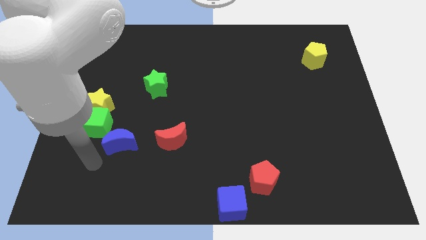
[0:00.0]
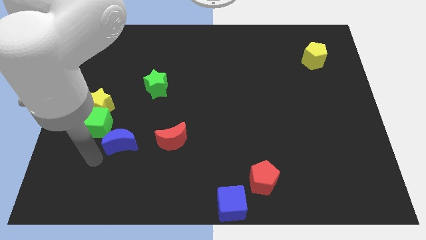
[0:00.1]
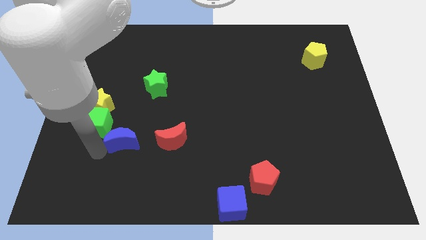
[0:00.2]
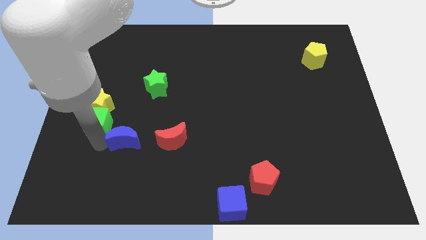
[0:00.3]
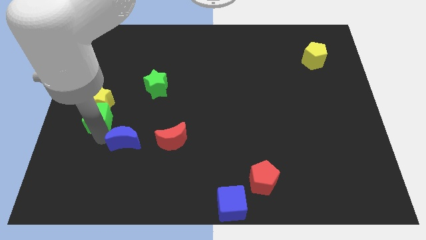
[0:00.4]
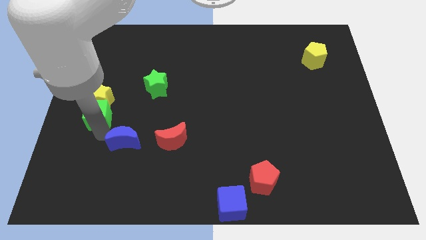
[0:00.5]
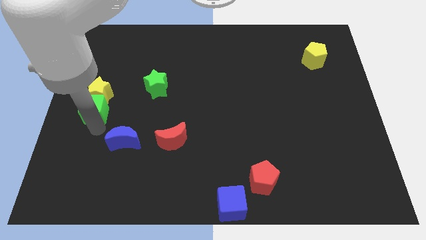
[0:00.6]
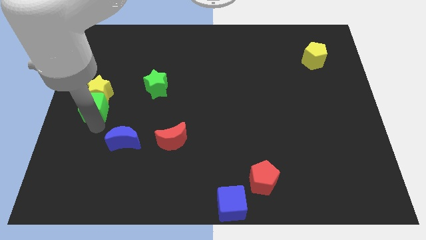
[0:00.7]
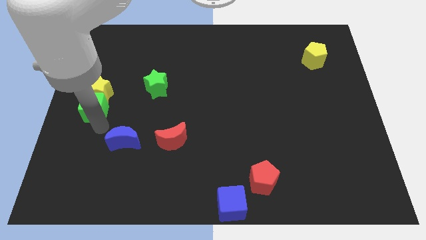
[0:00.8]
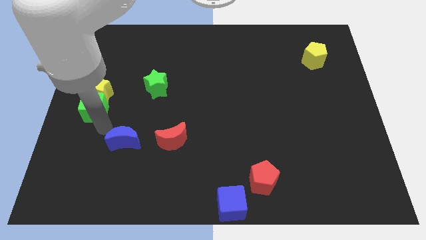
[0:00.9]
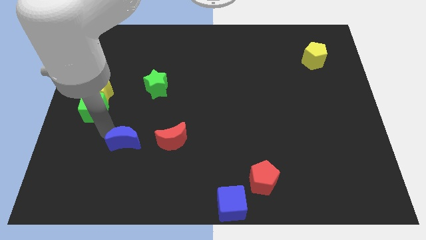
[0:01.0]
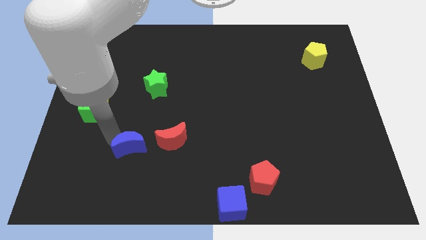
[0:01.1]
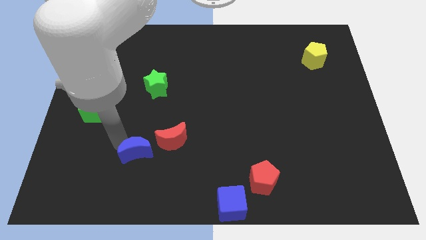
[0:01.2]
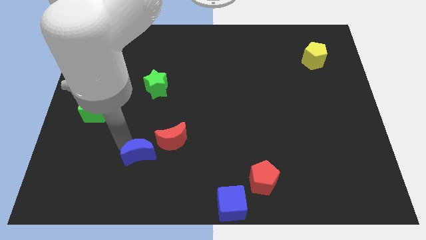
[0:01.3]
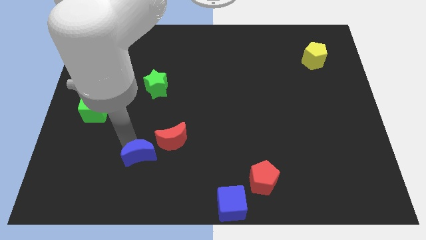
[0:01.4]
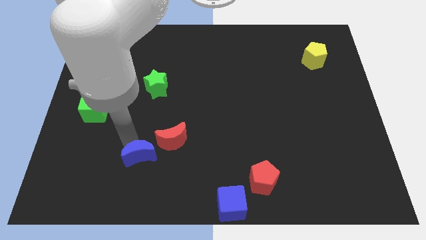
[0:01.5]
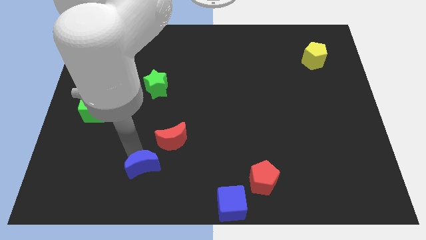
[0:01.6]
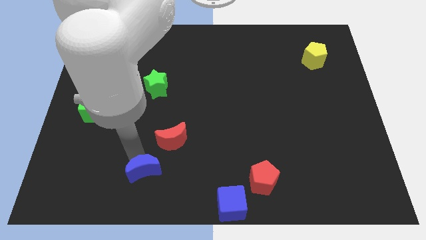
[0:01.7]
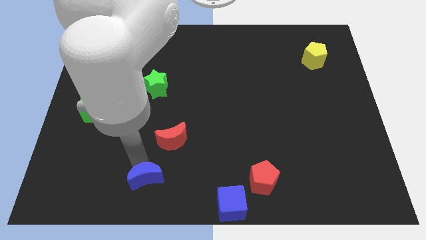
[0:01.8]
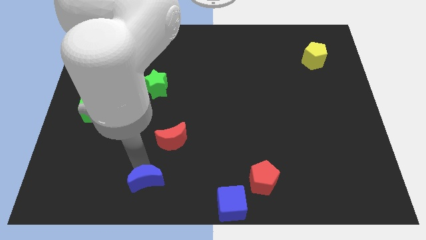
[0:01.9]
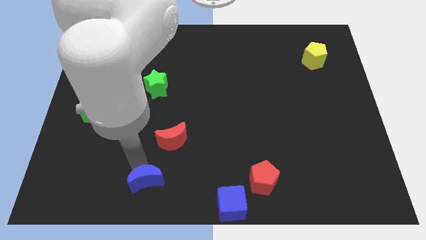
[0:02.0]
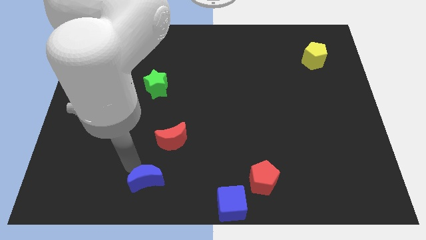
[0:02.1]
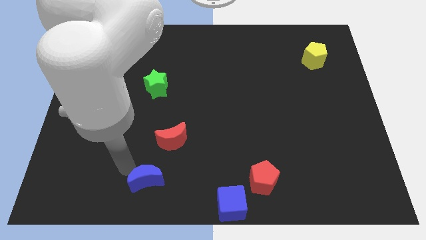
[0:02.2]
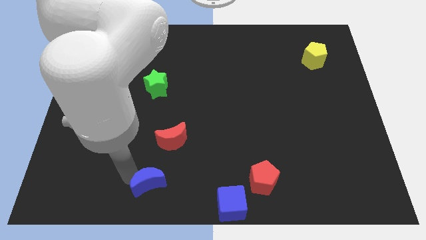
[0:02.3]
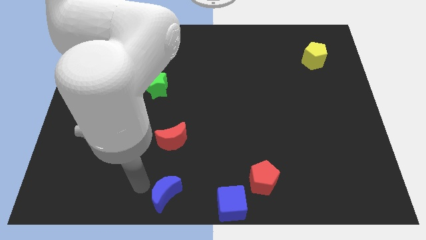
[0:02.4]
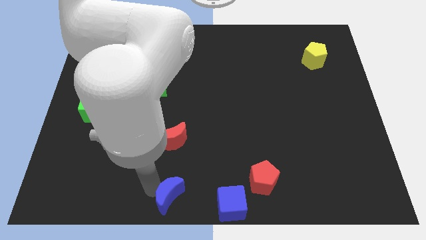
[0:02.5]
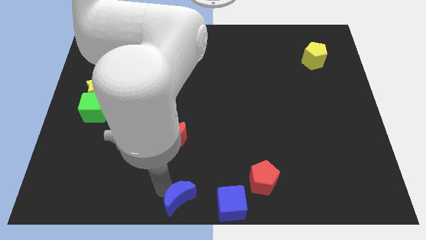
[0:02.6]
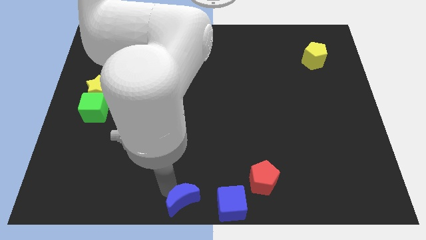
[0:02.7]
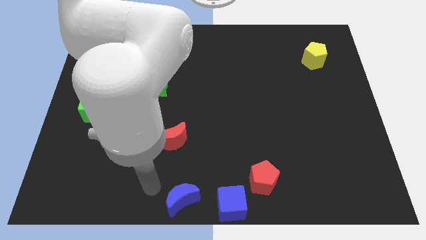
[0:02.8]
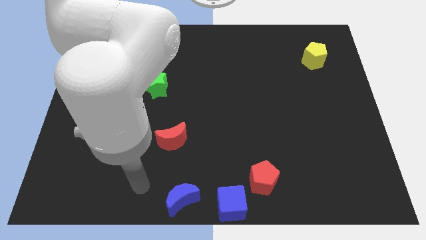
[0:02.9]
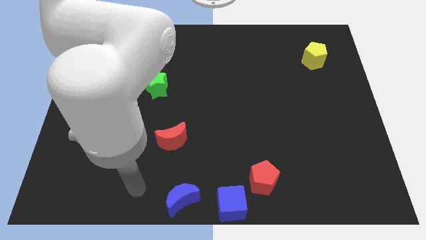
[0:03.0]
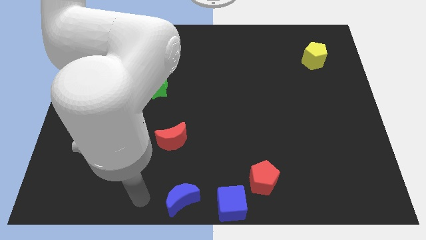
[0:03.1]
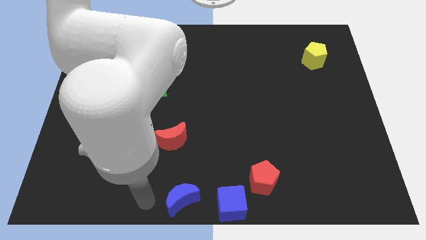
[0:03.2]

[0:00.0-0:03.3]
place the blue crescent diagonally to the yellow pentagon

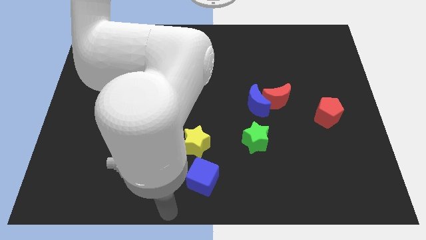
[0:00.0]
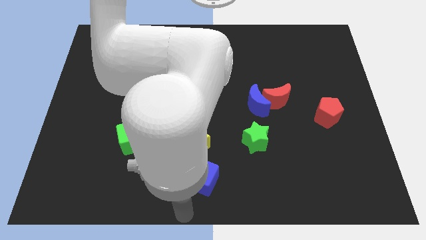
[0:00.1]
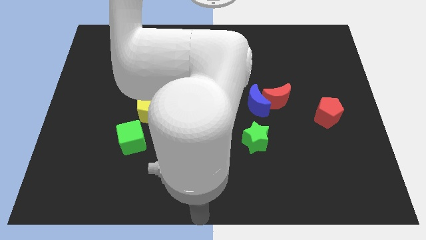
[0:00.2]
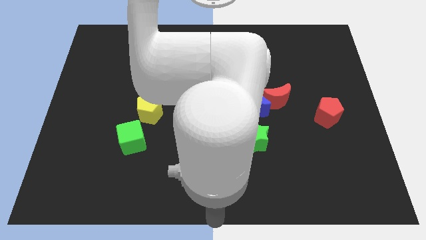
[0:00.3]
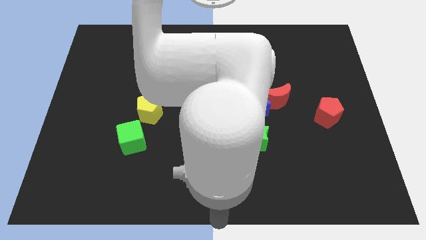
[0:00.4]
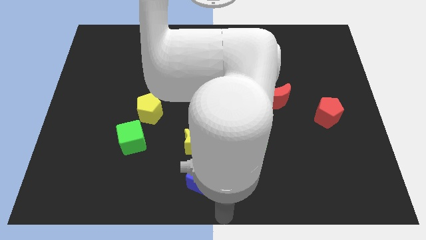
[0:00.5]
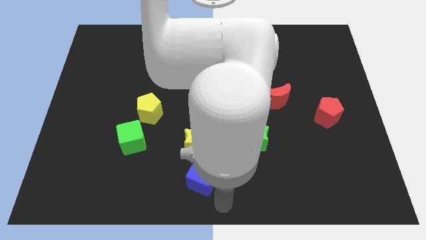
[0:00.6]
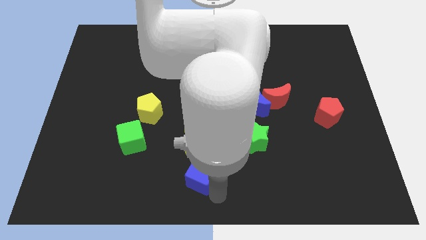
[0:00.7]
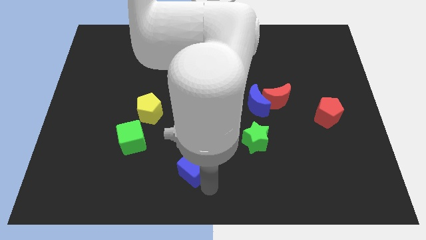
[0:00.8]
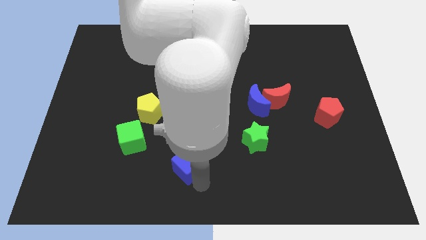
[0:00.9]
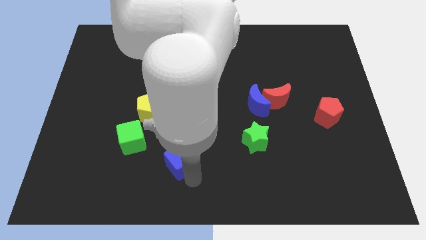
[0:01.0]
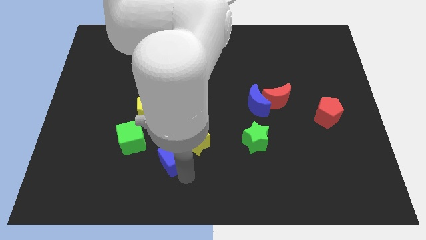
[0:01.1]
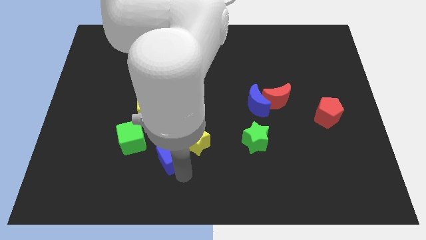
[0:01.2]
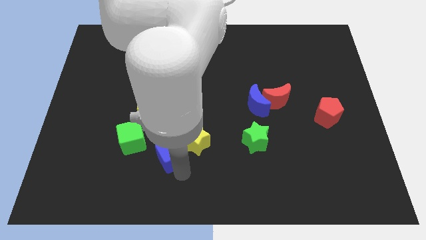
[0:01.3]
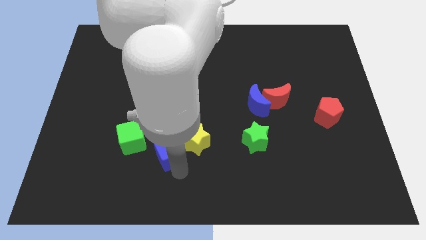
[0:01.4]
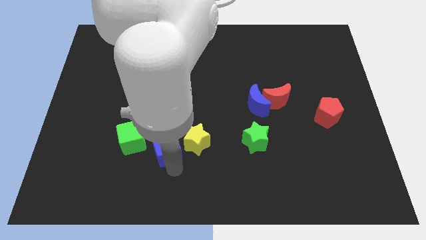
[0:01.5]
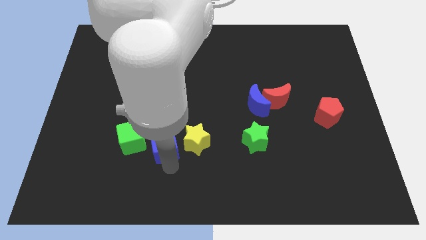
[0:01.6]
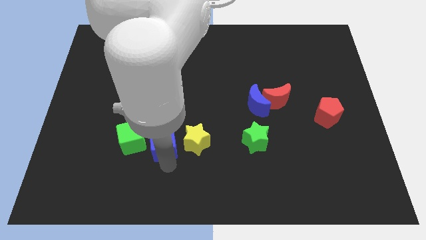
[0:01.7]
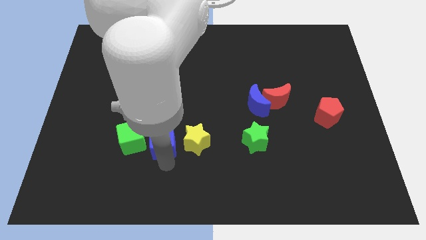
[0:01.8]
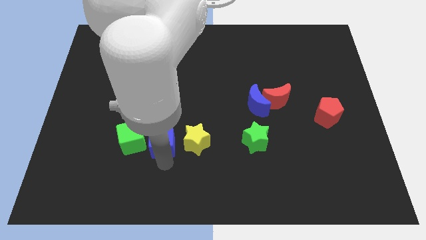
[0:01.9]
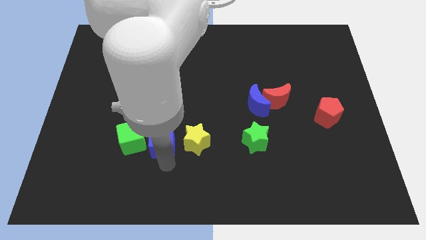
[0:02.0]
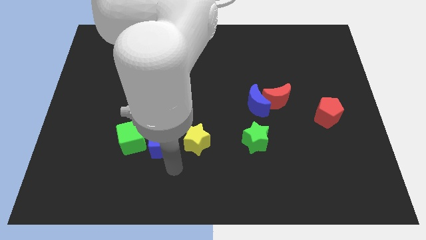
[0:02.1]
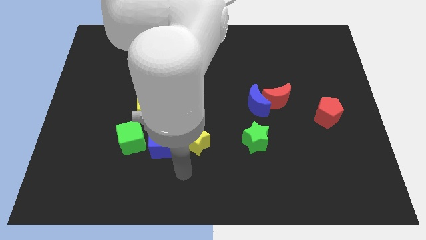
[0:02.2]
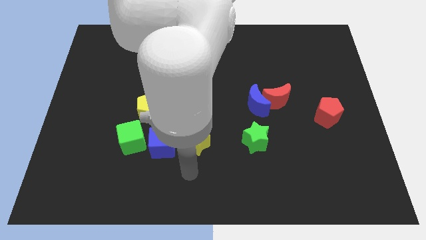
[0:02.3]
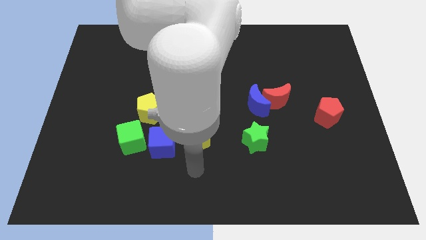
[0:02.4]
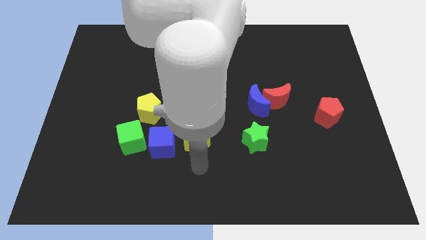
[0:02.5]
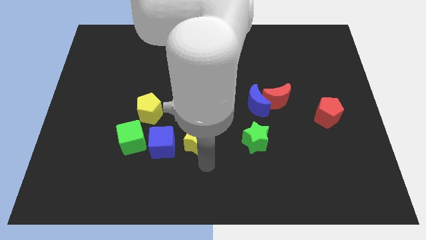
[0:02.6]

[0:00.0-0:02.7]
move the blue cube close to the green cube

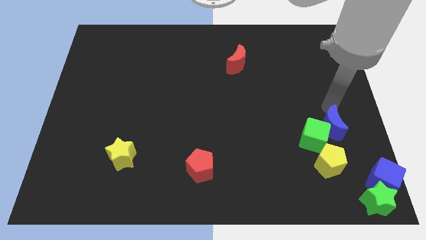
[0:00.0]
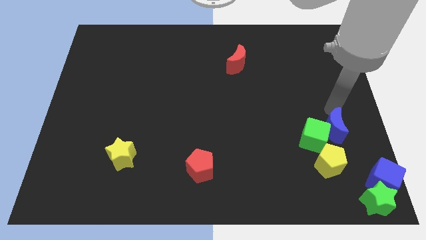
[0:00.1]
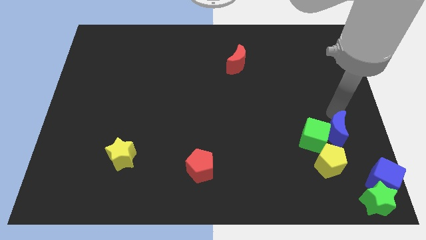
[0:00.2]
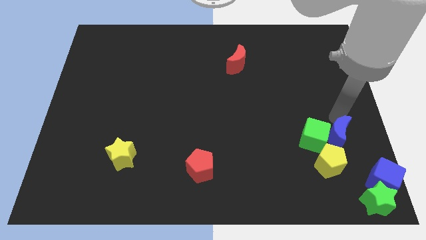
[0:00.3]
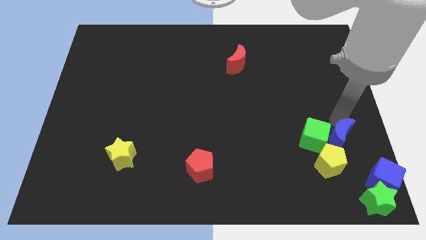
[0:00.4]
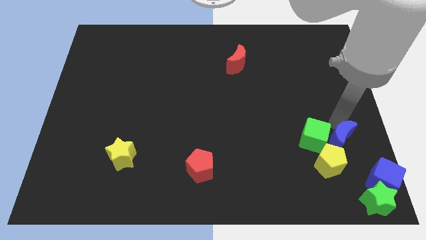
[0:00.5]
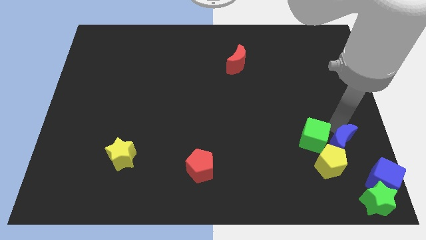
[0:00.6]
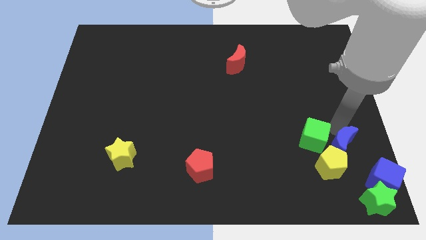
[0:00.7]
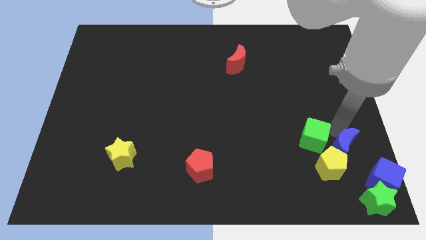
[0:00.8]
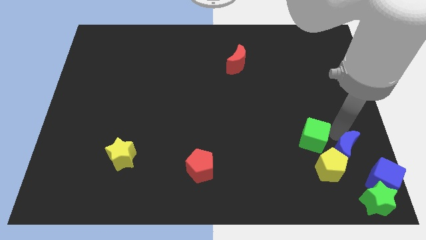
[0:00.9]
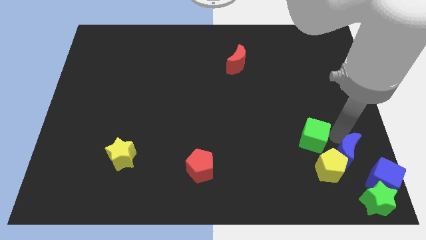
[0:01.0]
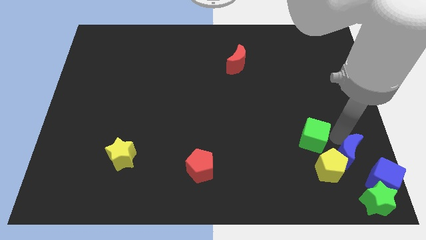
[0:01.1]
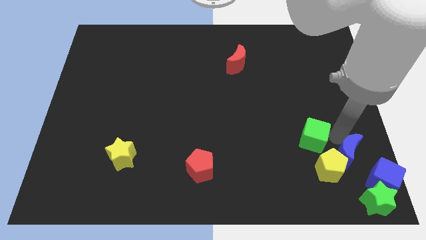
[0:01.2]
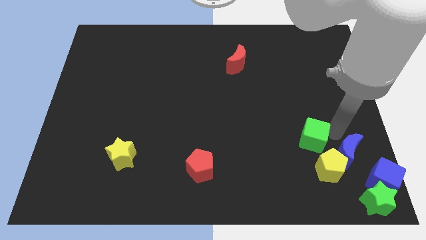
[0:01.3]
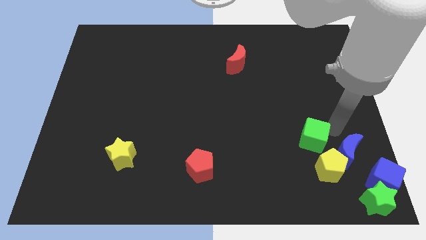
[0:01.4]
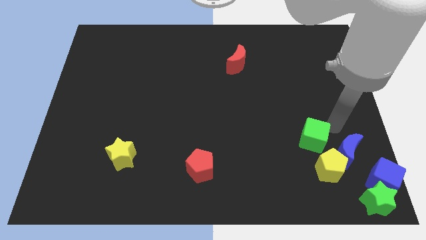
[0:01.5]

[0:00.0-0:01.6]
move the blue crescent on top right of the yellow pentagon

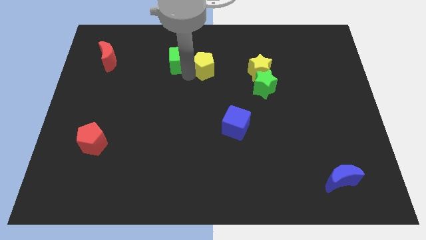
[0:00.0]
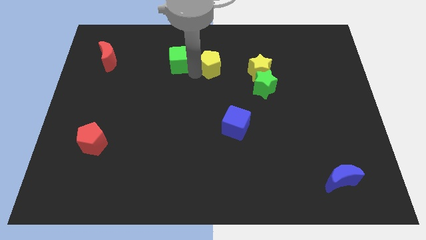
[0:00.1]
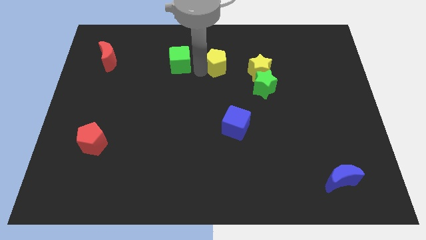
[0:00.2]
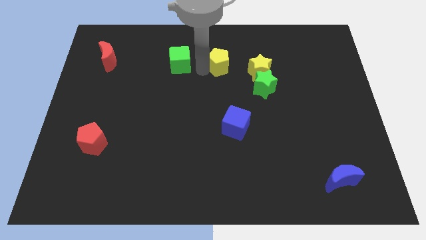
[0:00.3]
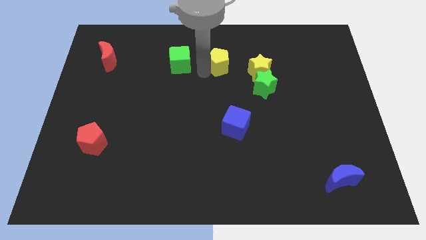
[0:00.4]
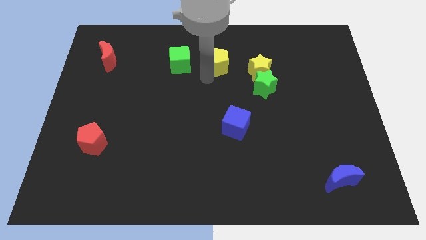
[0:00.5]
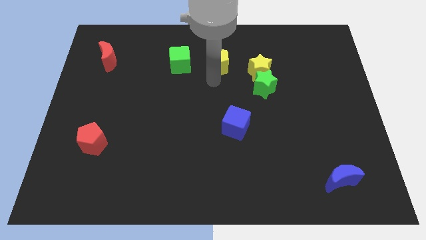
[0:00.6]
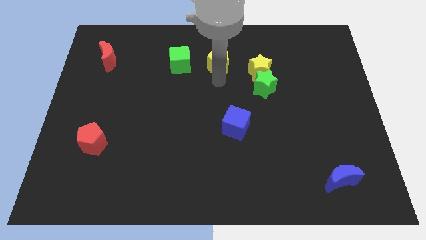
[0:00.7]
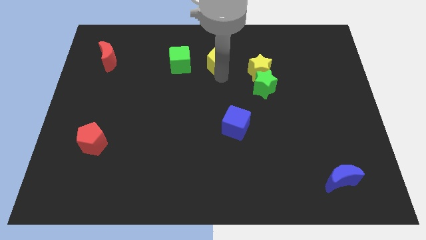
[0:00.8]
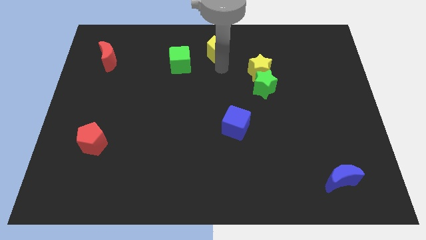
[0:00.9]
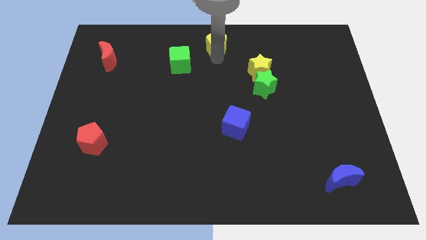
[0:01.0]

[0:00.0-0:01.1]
move the yellow pentagon away from the green cube

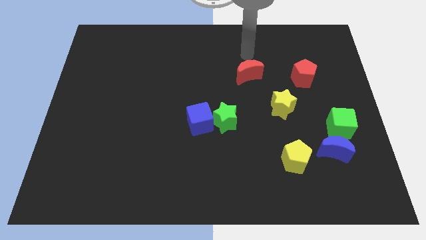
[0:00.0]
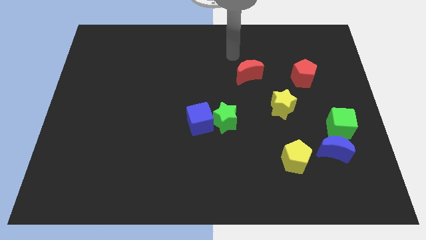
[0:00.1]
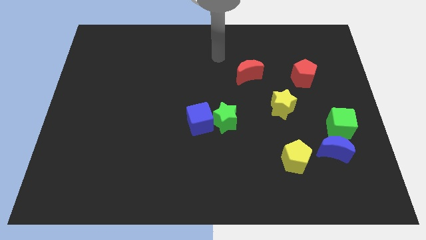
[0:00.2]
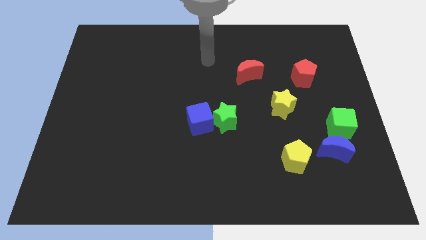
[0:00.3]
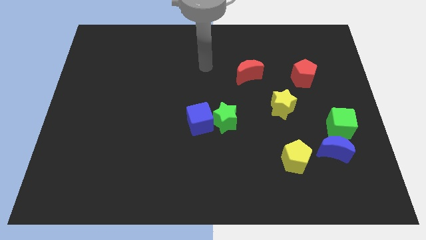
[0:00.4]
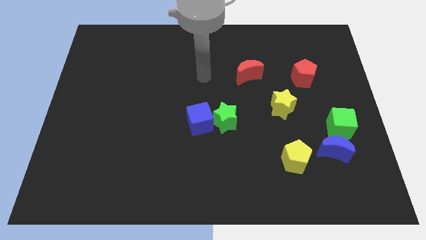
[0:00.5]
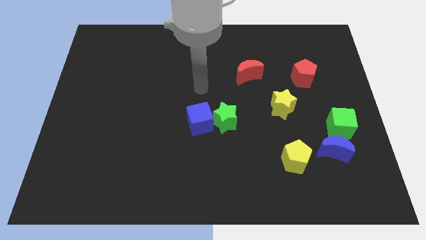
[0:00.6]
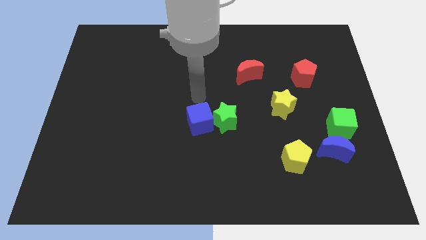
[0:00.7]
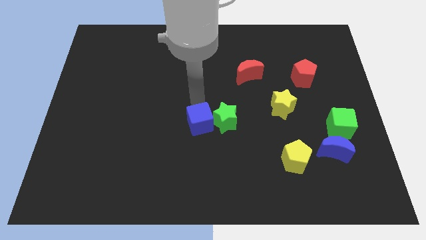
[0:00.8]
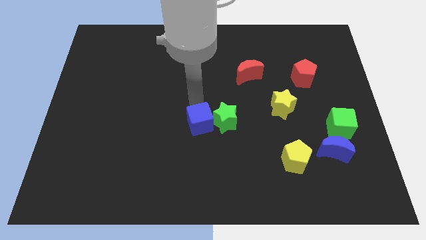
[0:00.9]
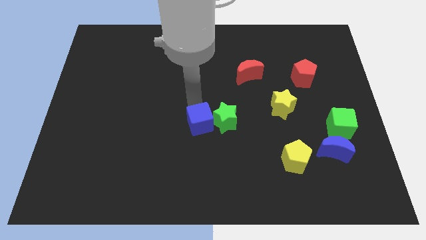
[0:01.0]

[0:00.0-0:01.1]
place your arm above the blue cube
